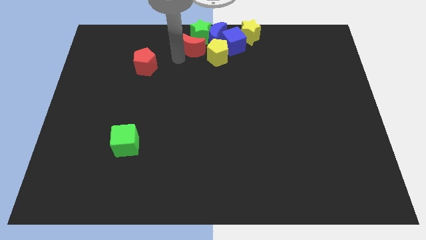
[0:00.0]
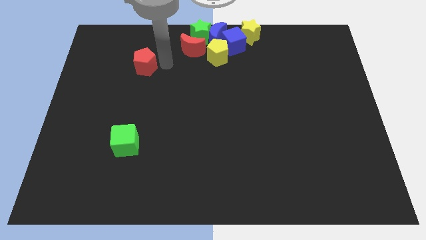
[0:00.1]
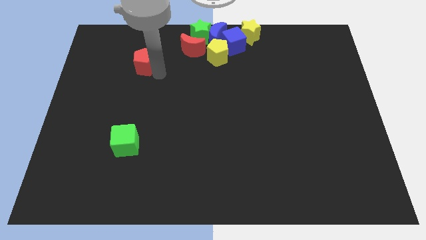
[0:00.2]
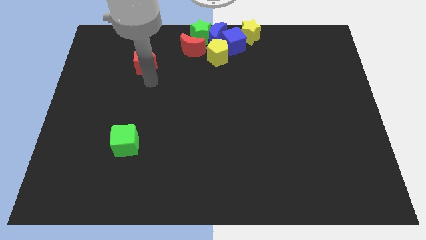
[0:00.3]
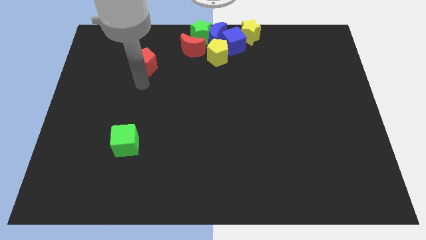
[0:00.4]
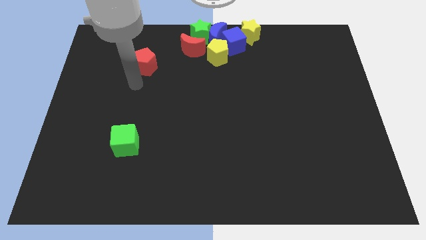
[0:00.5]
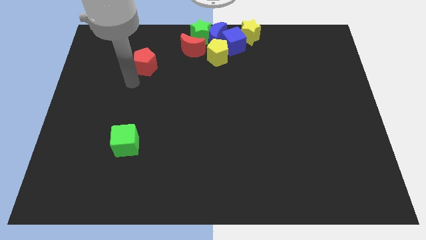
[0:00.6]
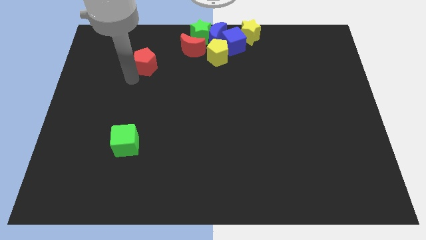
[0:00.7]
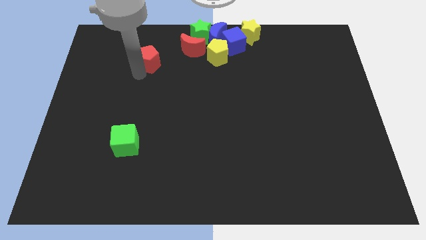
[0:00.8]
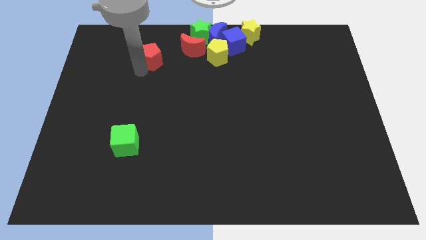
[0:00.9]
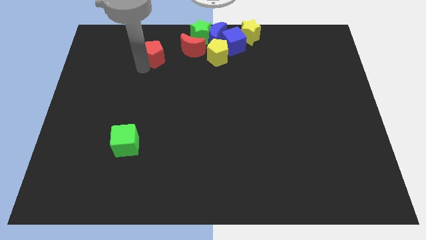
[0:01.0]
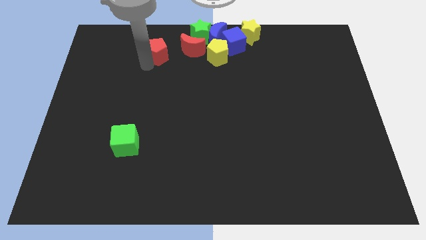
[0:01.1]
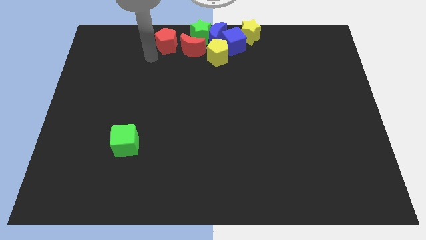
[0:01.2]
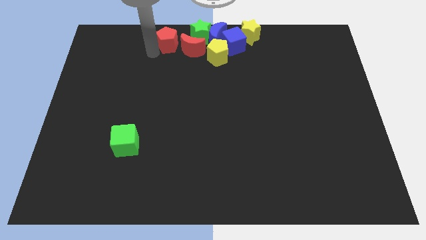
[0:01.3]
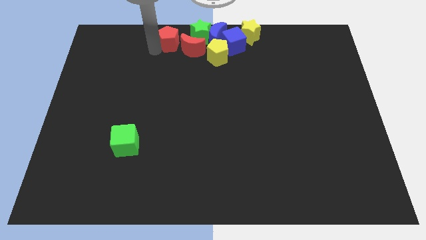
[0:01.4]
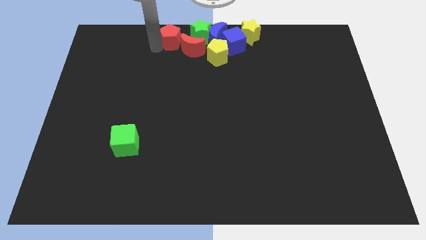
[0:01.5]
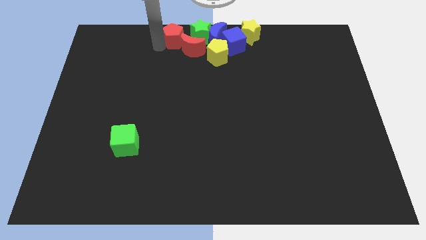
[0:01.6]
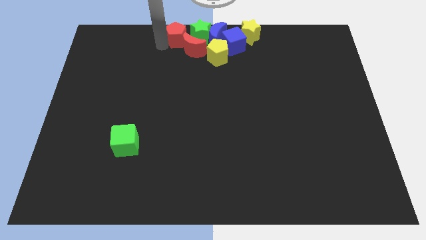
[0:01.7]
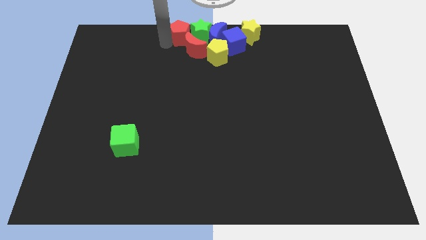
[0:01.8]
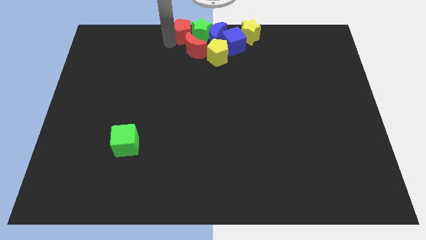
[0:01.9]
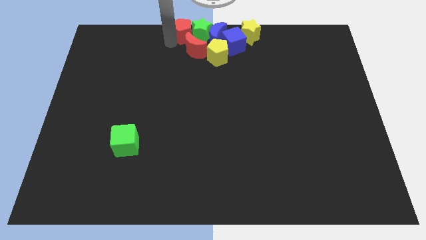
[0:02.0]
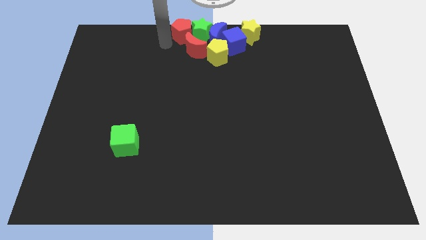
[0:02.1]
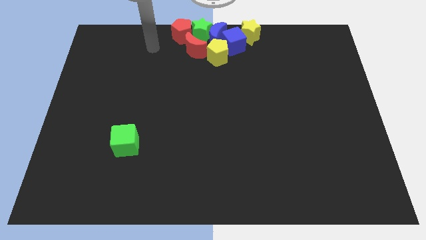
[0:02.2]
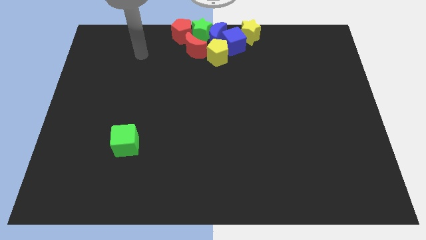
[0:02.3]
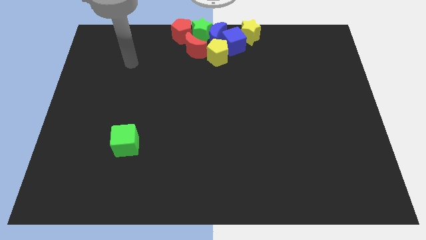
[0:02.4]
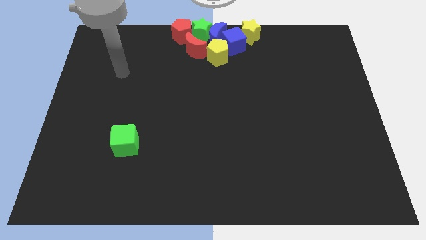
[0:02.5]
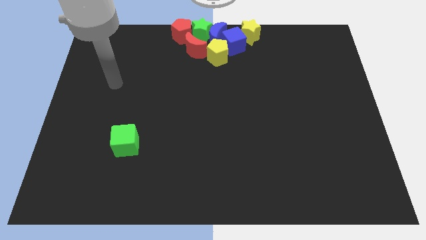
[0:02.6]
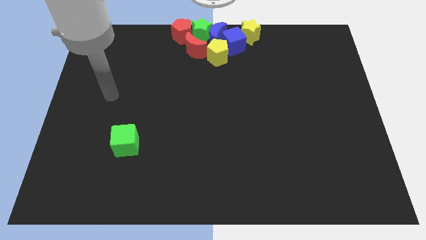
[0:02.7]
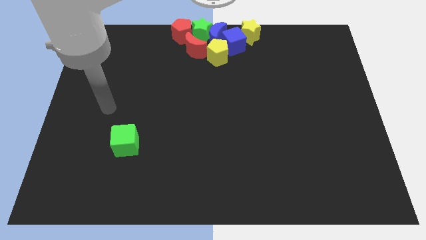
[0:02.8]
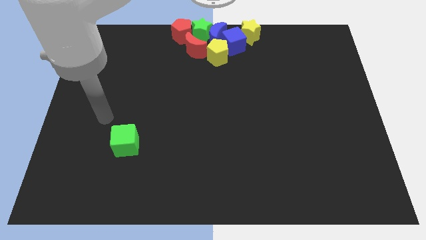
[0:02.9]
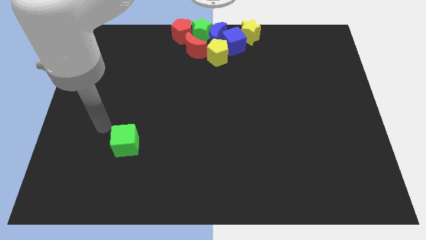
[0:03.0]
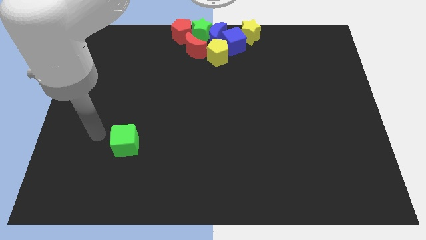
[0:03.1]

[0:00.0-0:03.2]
push the red pentagon to the group of blocks

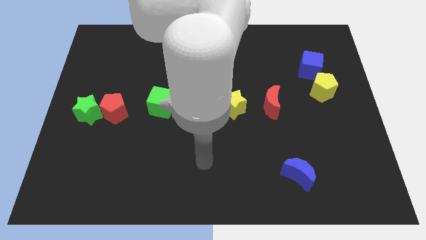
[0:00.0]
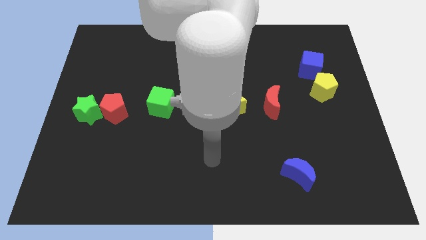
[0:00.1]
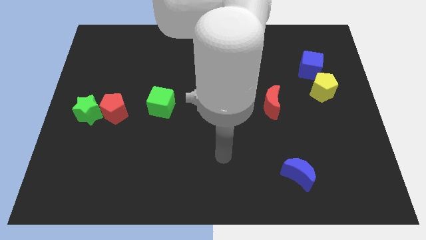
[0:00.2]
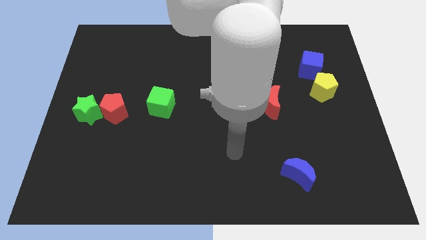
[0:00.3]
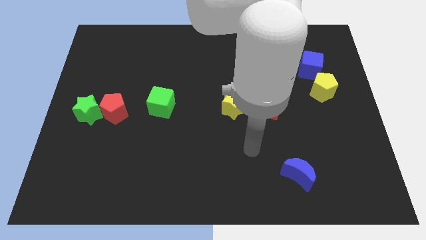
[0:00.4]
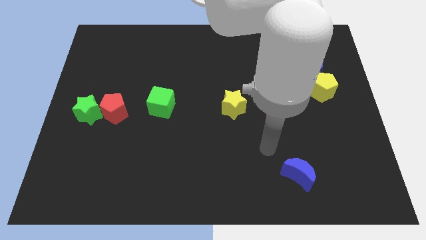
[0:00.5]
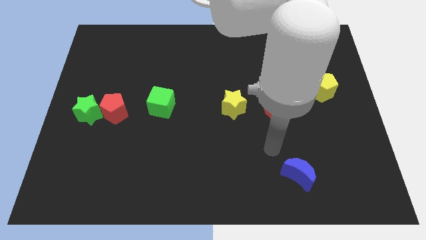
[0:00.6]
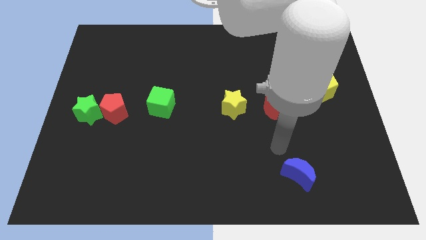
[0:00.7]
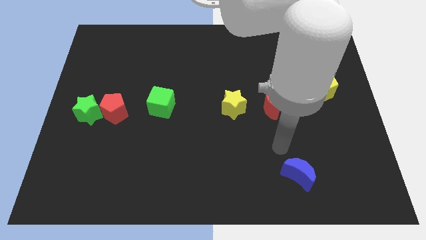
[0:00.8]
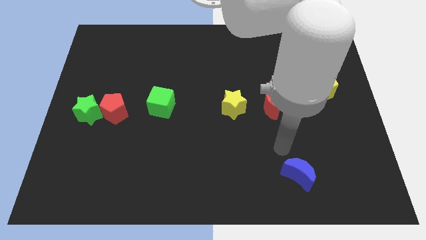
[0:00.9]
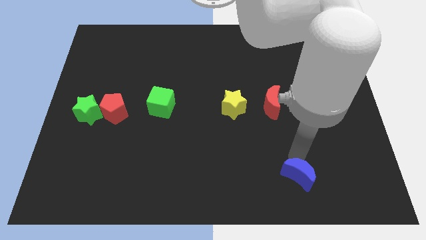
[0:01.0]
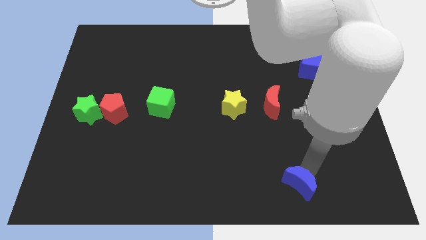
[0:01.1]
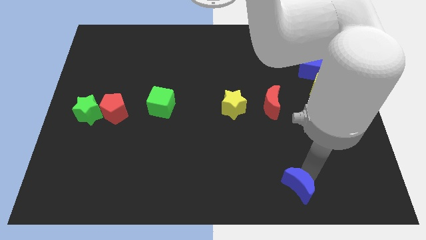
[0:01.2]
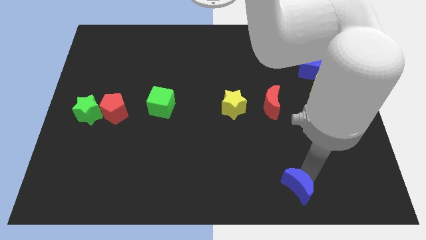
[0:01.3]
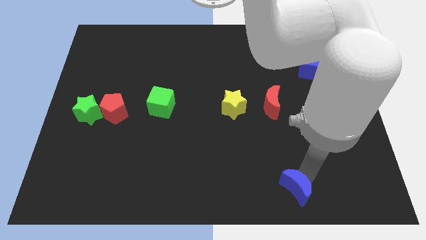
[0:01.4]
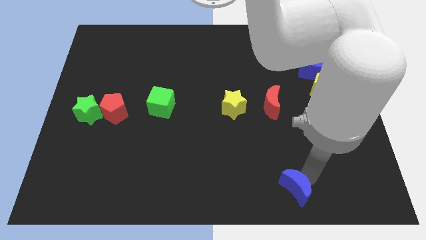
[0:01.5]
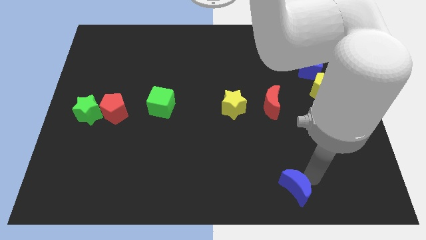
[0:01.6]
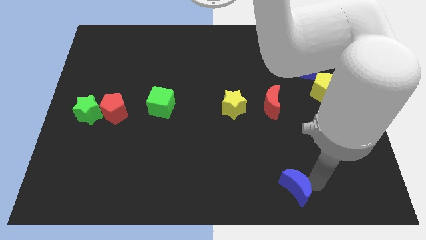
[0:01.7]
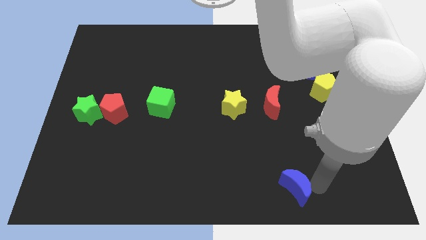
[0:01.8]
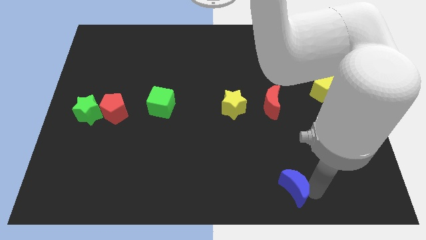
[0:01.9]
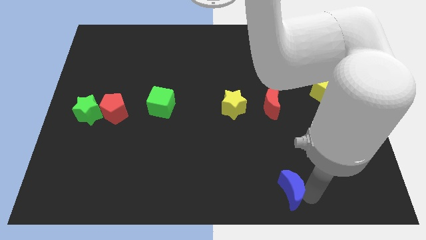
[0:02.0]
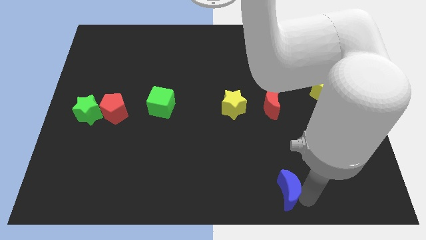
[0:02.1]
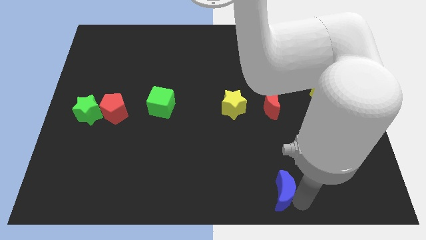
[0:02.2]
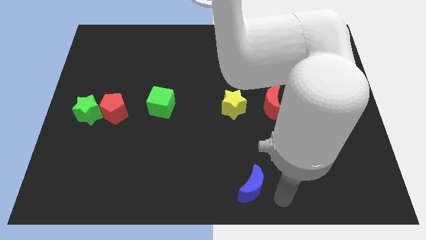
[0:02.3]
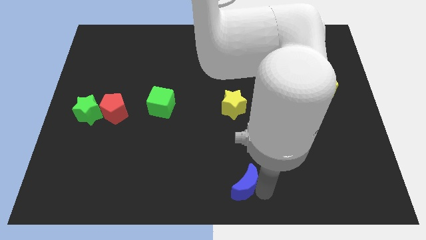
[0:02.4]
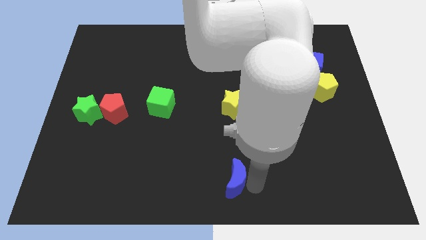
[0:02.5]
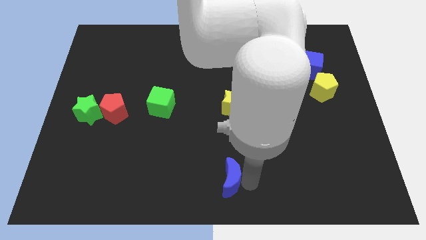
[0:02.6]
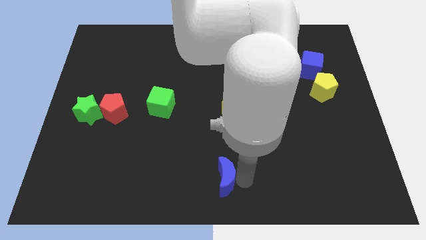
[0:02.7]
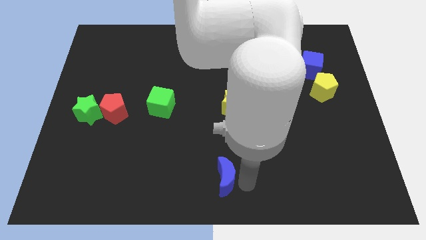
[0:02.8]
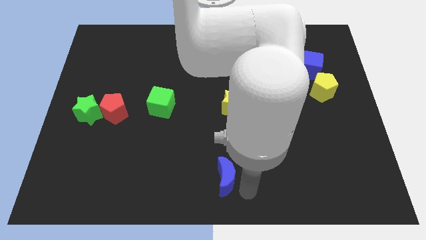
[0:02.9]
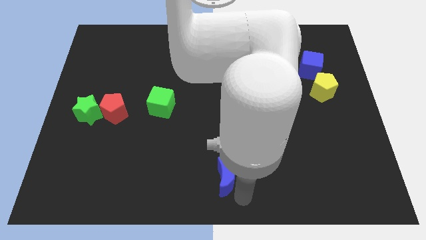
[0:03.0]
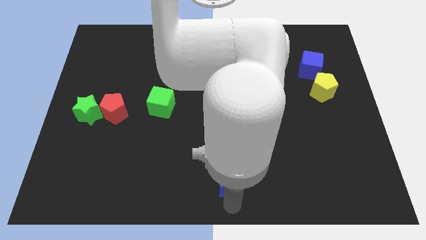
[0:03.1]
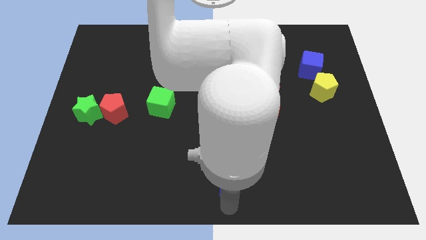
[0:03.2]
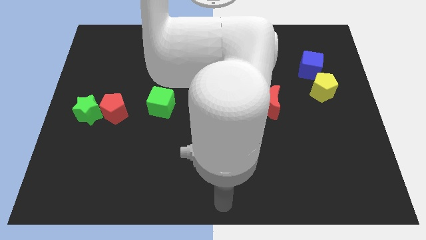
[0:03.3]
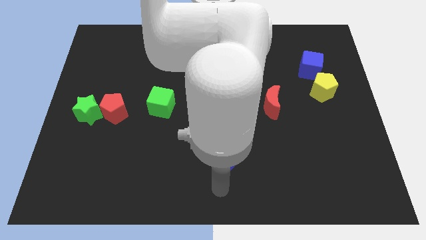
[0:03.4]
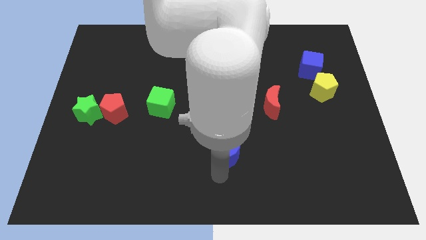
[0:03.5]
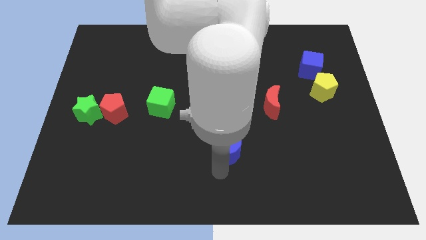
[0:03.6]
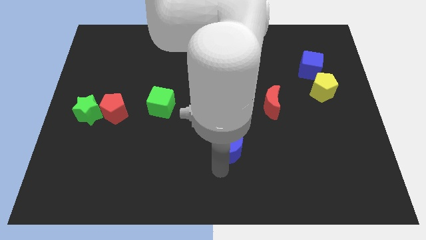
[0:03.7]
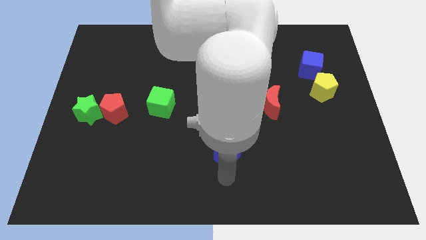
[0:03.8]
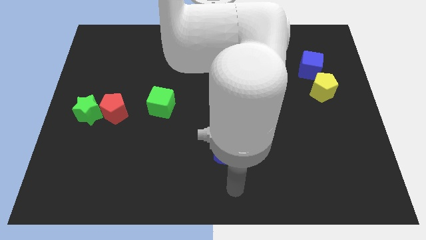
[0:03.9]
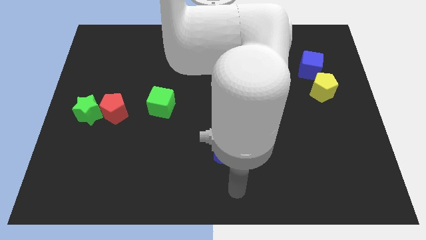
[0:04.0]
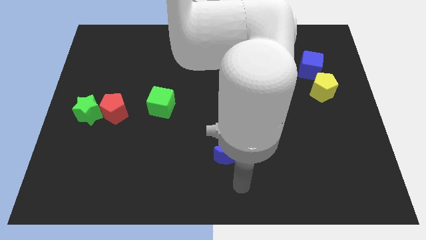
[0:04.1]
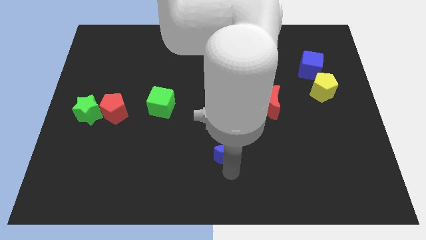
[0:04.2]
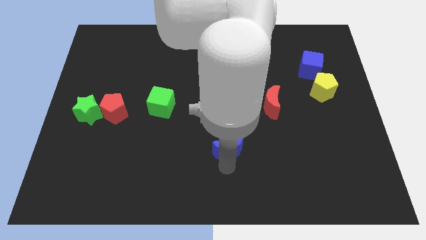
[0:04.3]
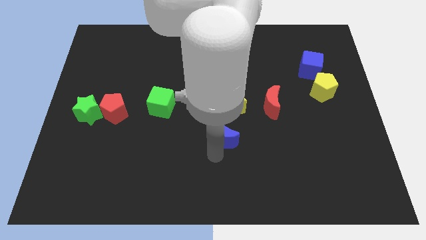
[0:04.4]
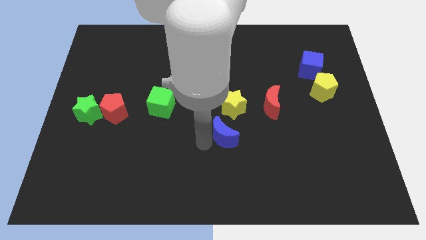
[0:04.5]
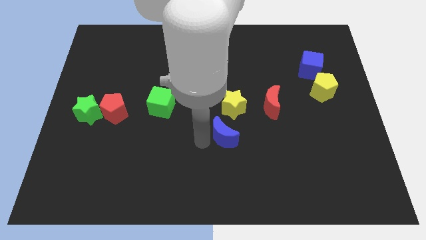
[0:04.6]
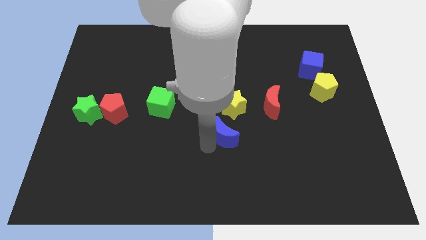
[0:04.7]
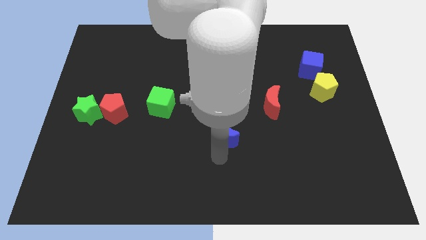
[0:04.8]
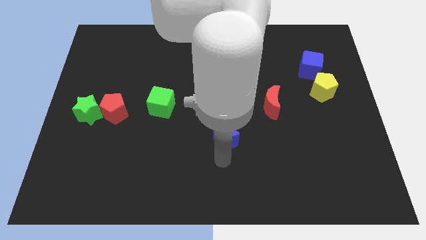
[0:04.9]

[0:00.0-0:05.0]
push the blue moon down to yellow star

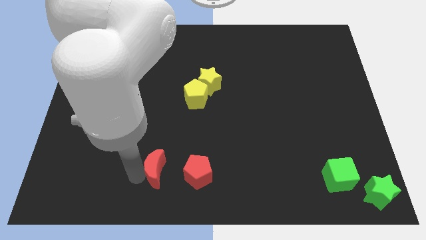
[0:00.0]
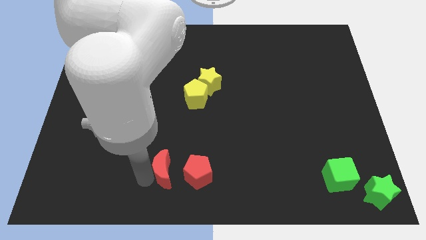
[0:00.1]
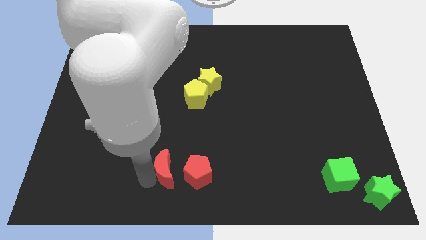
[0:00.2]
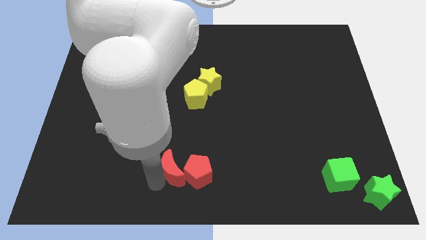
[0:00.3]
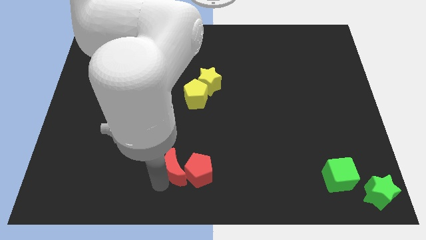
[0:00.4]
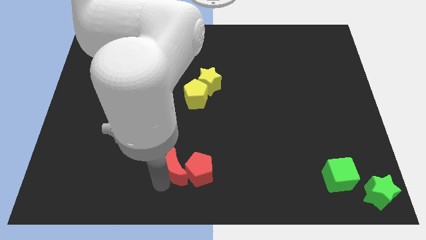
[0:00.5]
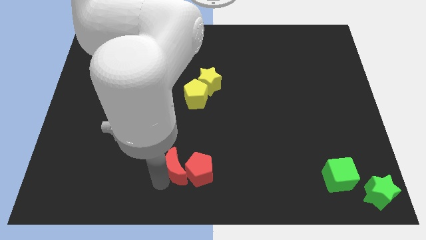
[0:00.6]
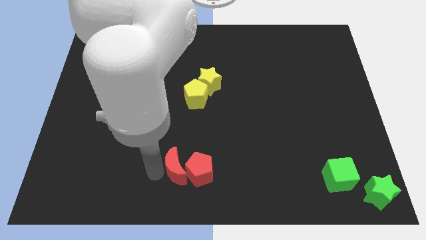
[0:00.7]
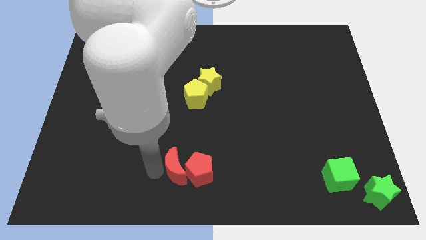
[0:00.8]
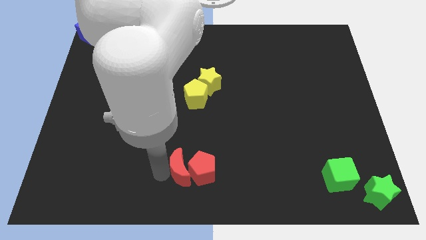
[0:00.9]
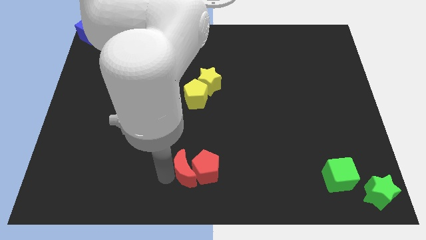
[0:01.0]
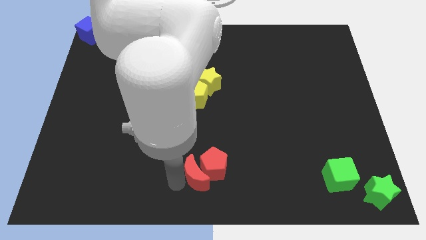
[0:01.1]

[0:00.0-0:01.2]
push the red crescent into the red pentagon at the bottom center of the board
